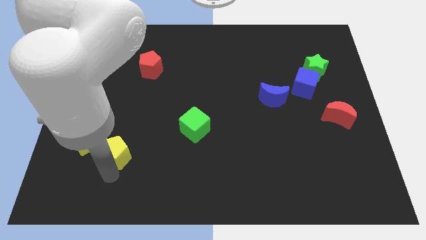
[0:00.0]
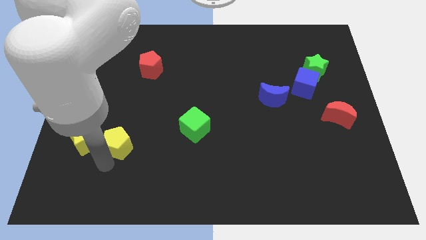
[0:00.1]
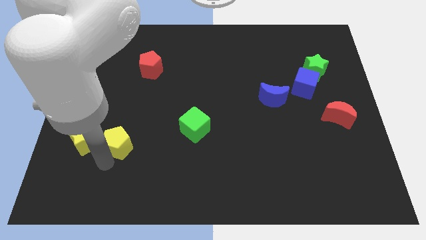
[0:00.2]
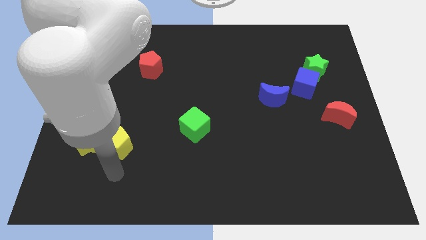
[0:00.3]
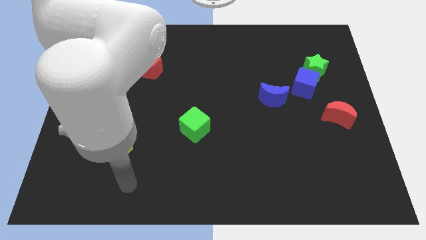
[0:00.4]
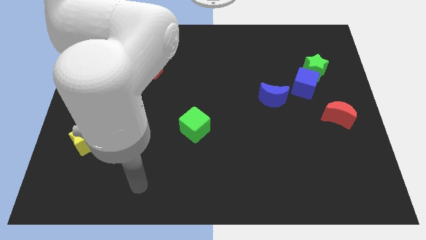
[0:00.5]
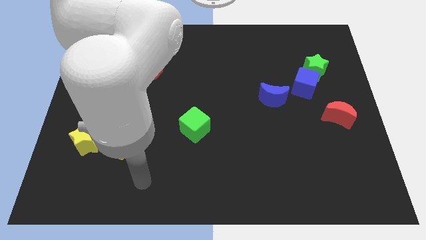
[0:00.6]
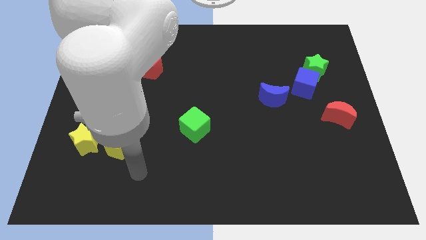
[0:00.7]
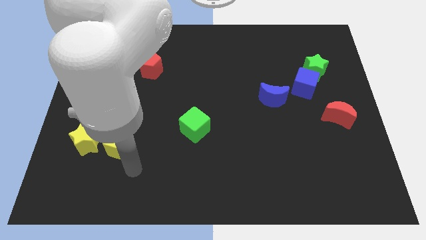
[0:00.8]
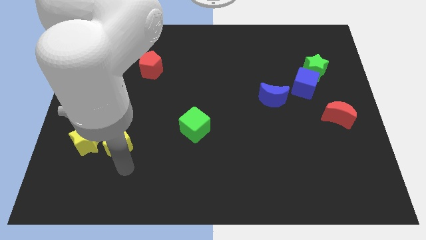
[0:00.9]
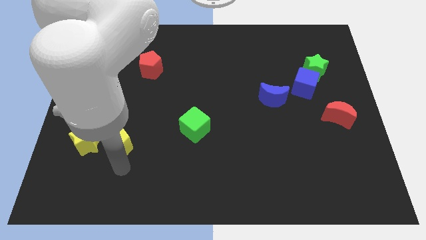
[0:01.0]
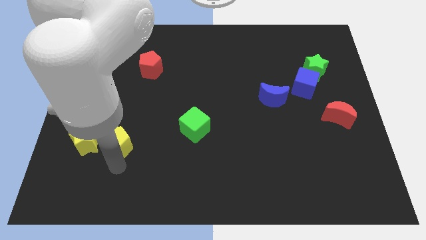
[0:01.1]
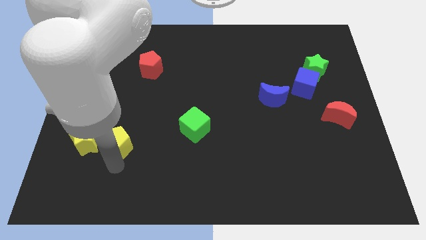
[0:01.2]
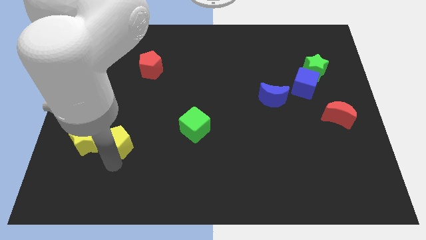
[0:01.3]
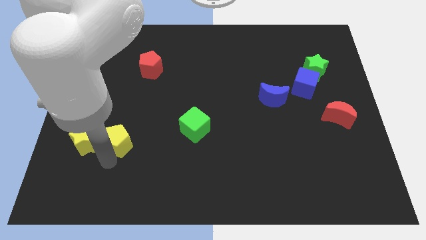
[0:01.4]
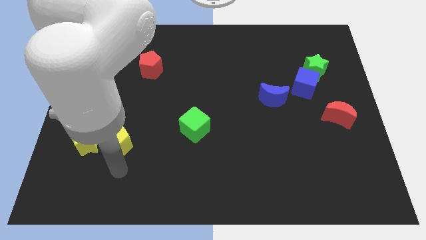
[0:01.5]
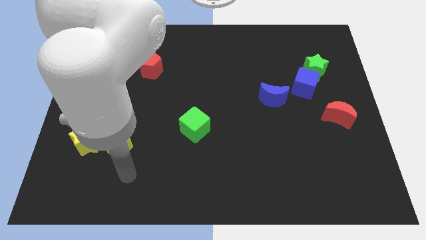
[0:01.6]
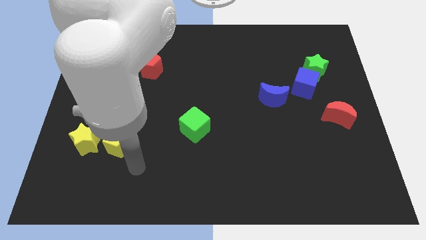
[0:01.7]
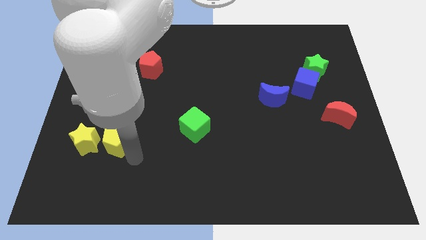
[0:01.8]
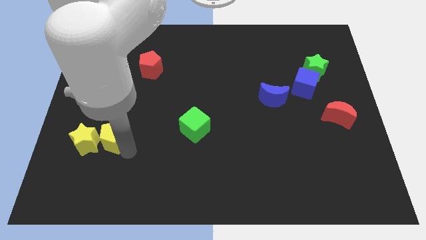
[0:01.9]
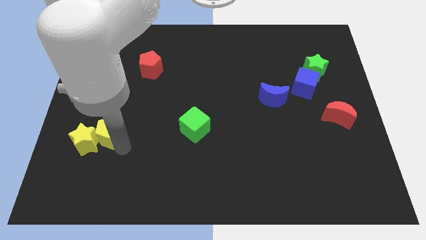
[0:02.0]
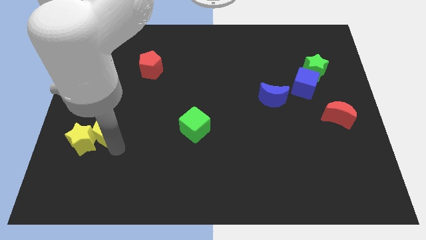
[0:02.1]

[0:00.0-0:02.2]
push yellow pentagon into yellow star

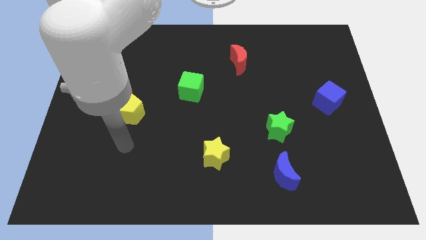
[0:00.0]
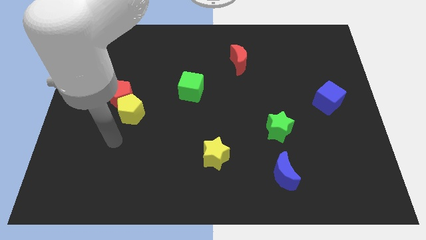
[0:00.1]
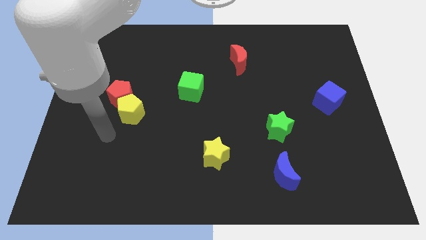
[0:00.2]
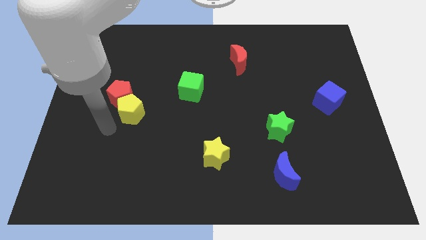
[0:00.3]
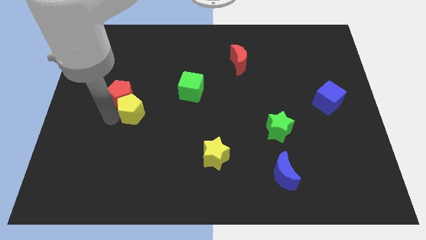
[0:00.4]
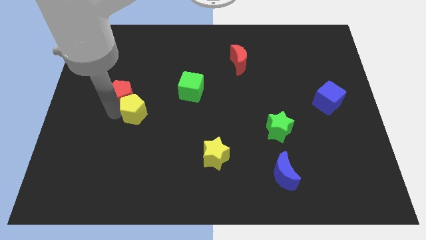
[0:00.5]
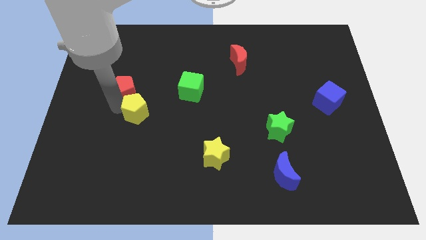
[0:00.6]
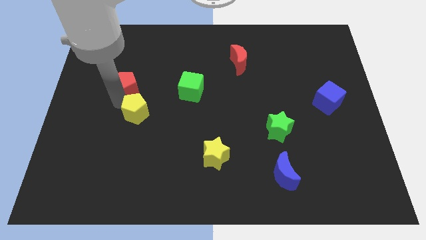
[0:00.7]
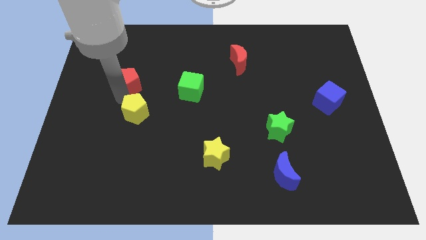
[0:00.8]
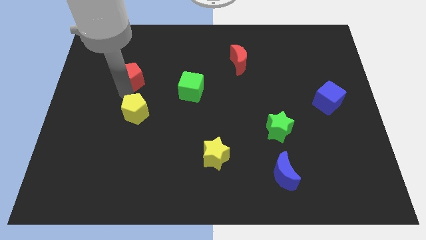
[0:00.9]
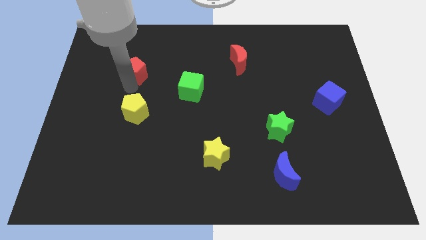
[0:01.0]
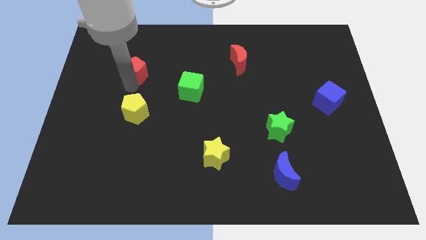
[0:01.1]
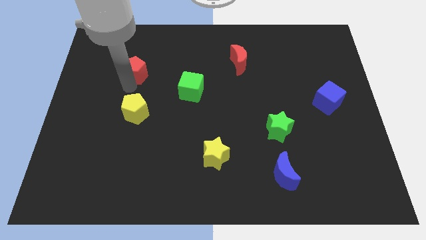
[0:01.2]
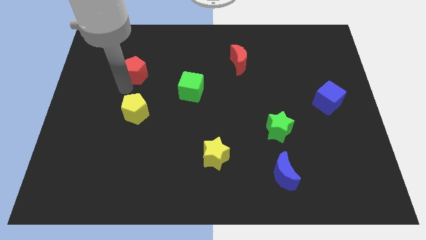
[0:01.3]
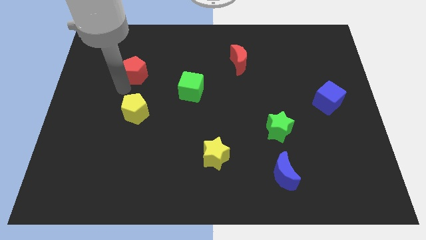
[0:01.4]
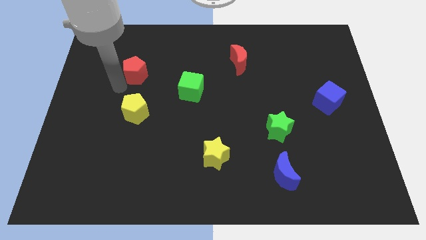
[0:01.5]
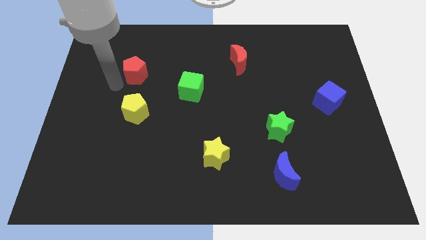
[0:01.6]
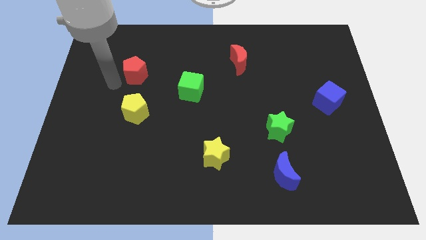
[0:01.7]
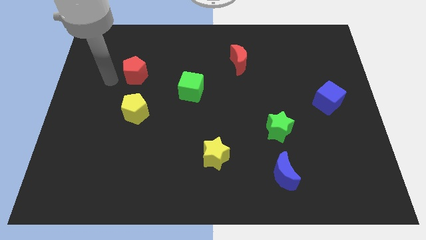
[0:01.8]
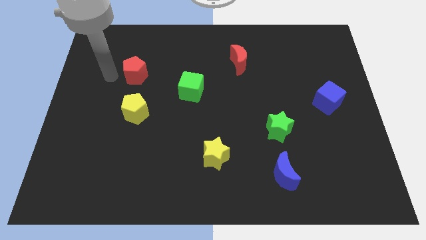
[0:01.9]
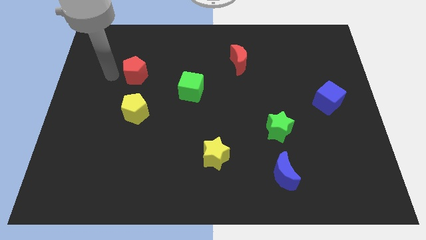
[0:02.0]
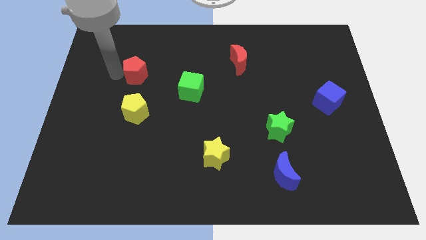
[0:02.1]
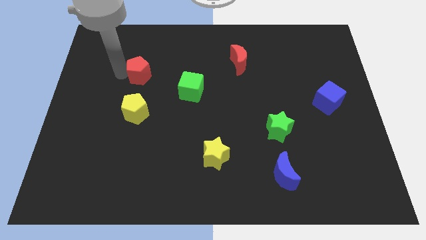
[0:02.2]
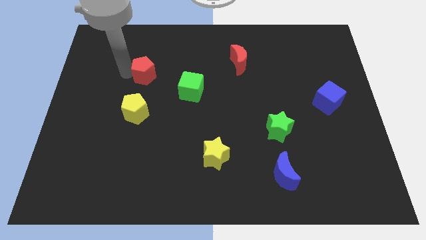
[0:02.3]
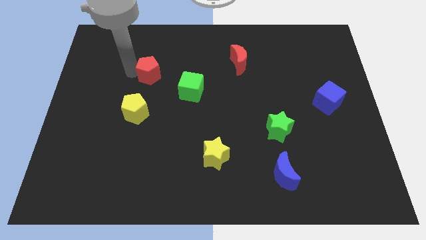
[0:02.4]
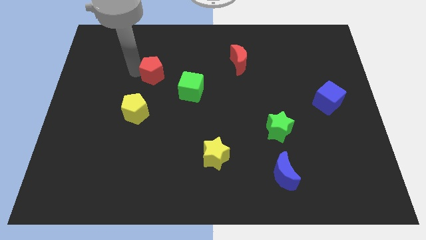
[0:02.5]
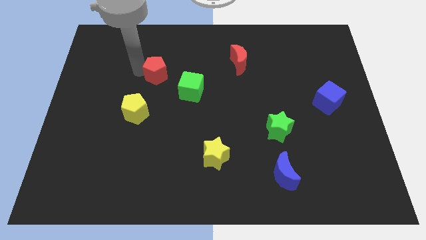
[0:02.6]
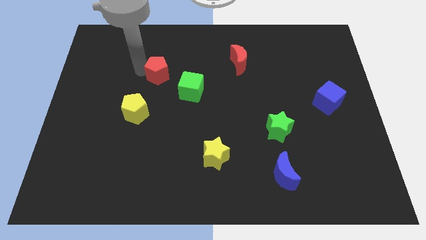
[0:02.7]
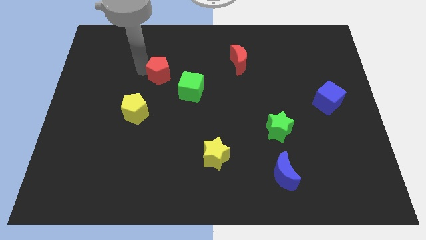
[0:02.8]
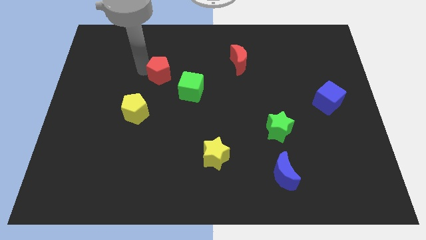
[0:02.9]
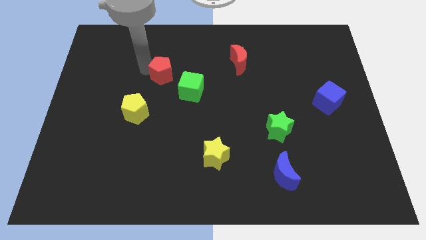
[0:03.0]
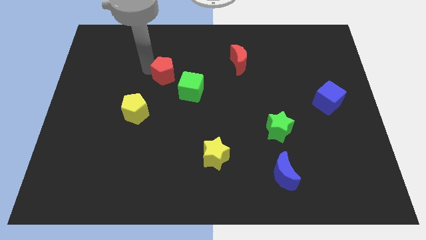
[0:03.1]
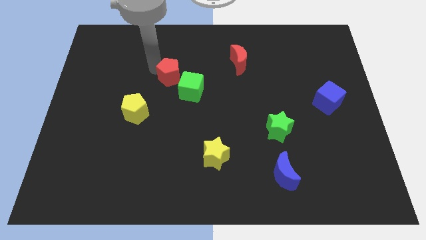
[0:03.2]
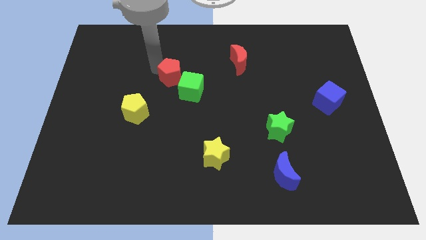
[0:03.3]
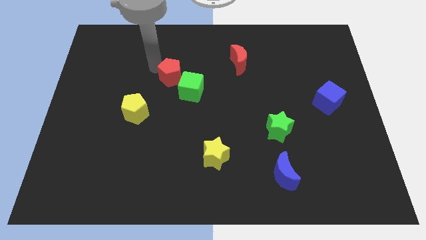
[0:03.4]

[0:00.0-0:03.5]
slightly move the red pentagon to the right

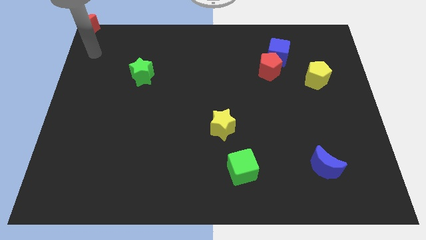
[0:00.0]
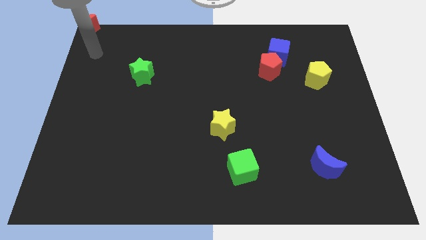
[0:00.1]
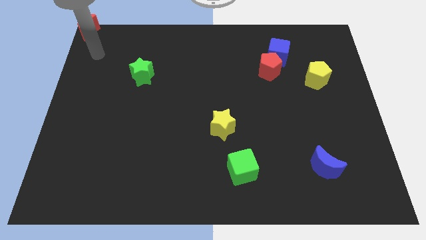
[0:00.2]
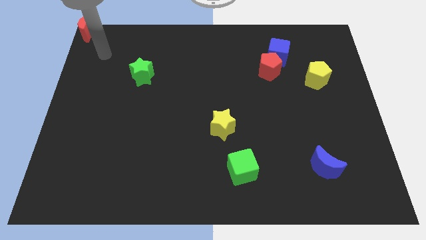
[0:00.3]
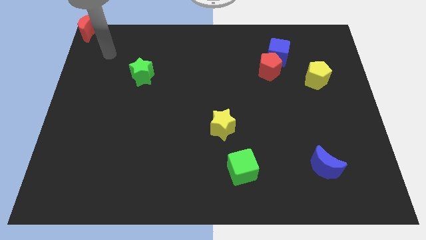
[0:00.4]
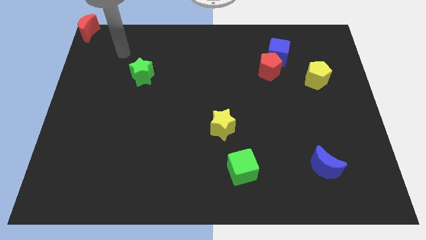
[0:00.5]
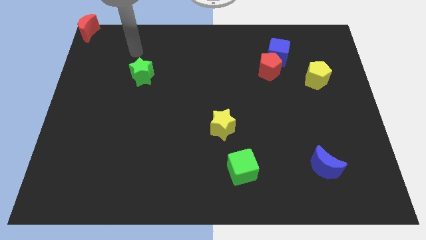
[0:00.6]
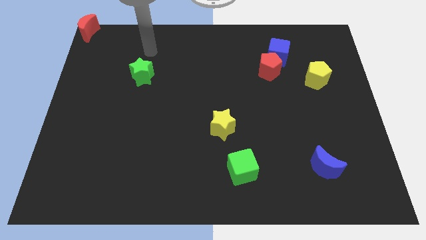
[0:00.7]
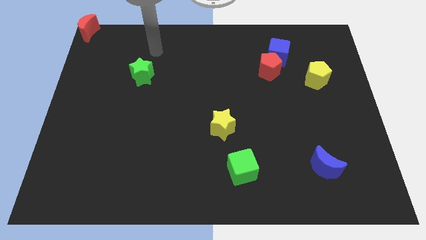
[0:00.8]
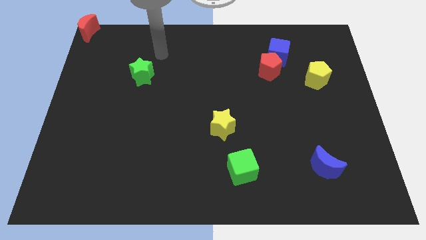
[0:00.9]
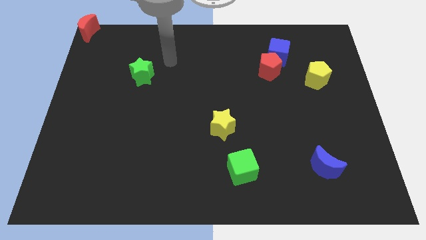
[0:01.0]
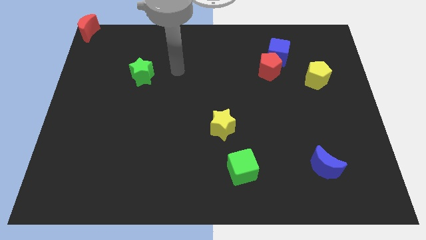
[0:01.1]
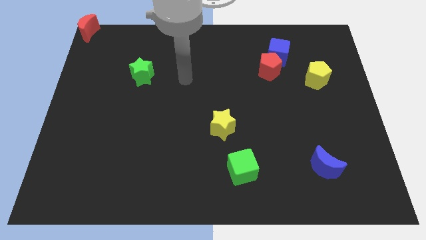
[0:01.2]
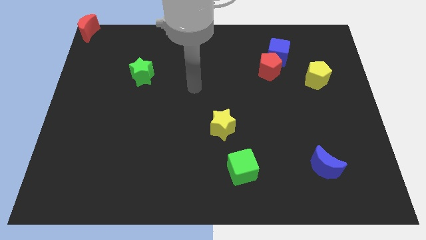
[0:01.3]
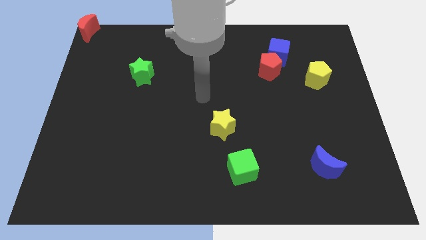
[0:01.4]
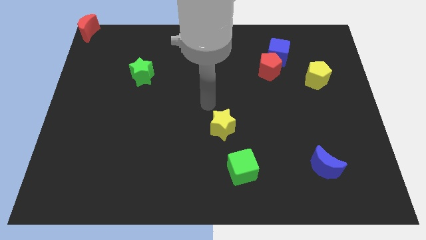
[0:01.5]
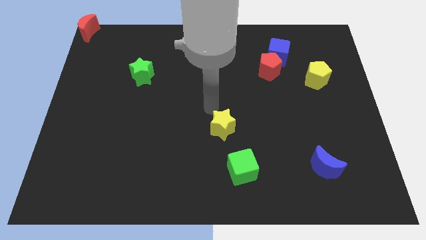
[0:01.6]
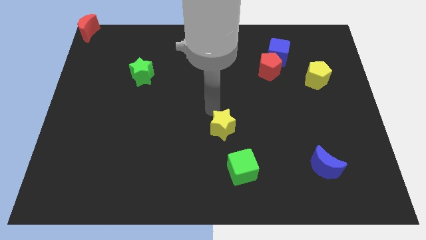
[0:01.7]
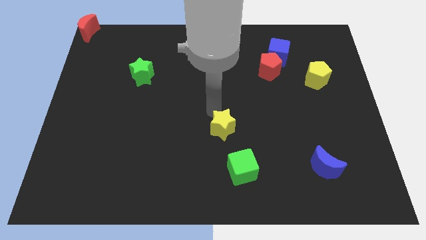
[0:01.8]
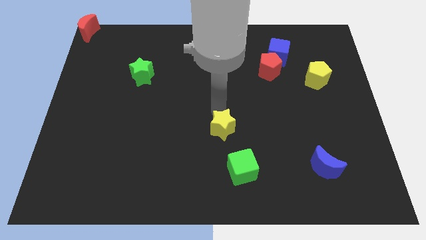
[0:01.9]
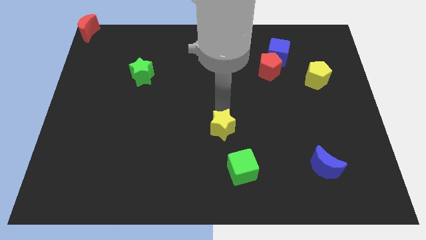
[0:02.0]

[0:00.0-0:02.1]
move your arm to the top of the yellow star

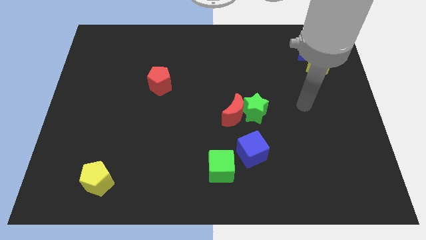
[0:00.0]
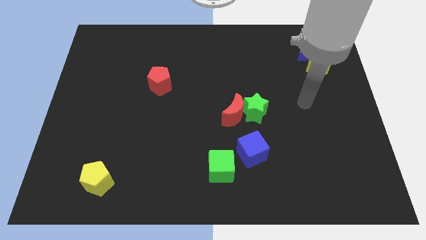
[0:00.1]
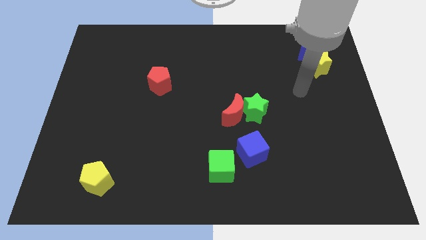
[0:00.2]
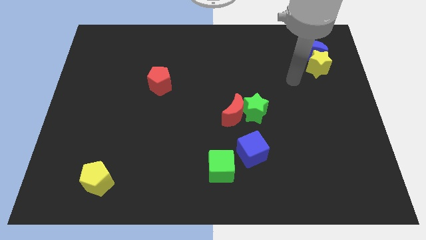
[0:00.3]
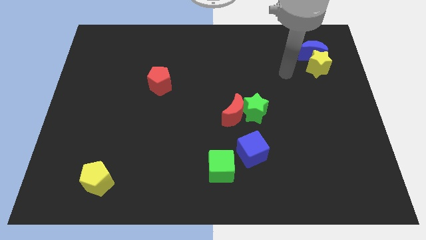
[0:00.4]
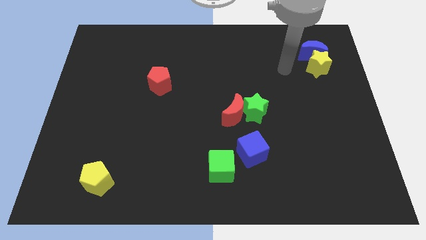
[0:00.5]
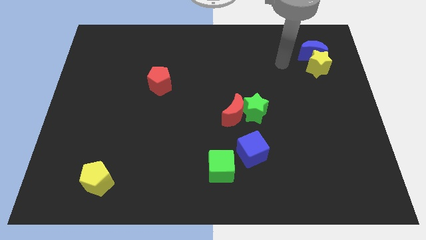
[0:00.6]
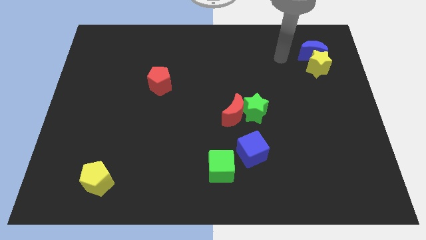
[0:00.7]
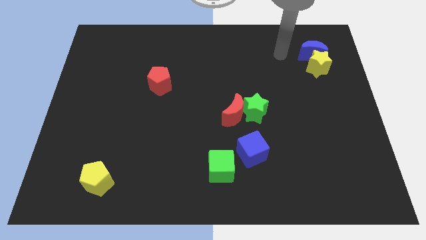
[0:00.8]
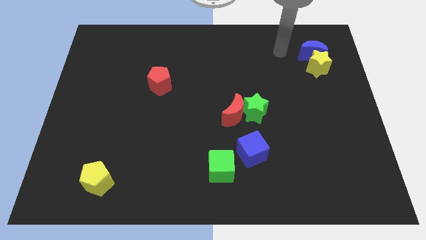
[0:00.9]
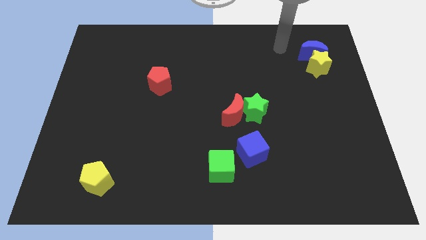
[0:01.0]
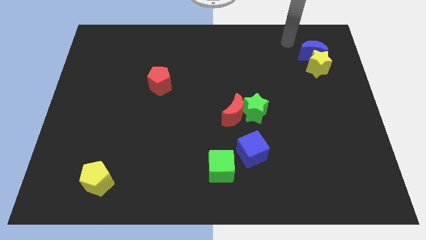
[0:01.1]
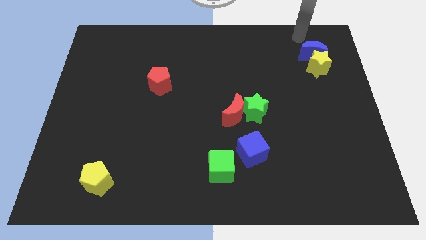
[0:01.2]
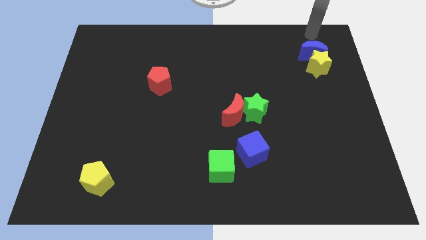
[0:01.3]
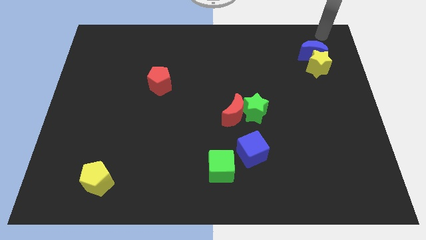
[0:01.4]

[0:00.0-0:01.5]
point your arm above the blue crescent
